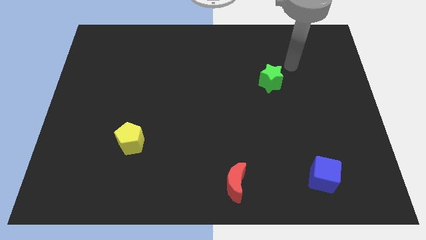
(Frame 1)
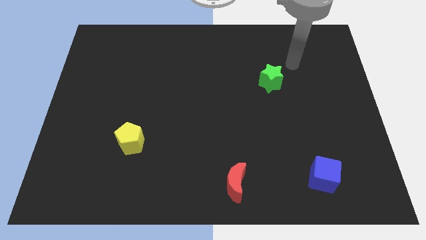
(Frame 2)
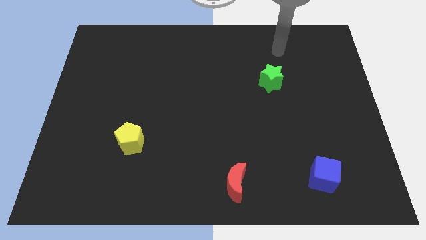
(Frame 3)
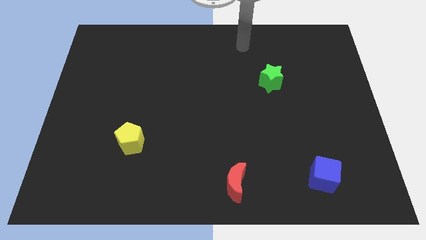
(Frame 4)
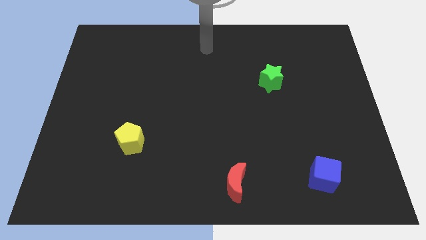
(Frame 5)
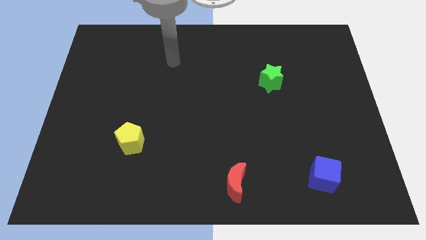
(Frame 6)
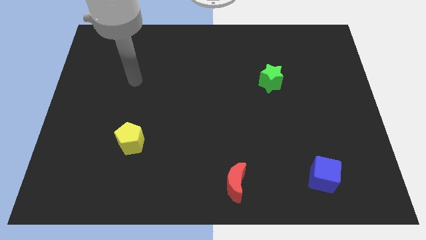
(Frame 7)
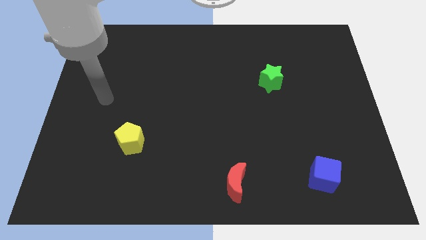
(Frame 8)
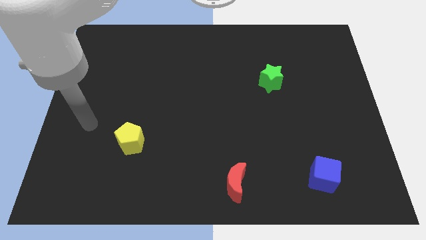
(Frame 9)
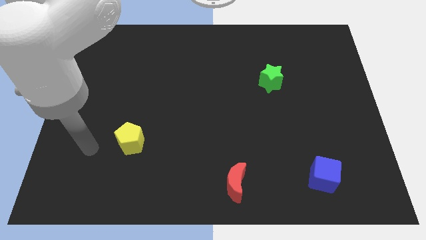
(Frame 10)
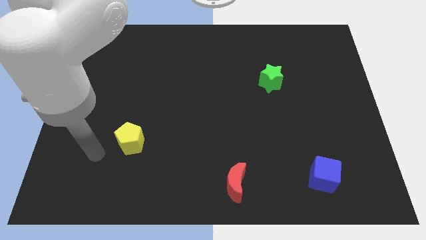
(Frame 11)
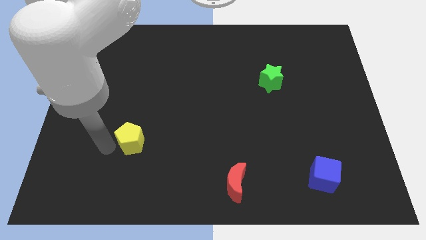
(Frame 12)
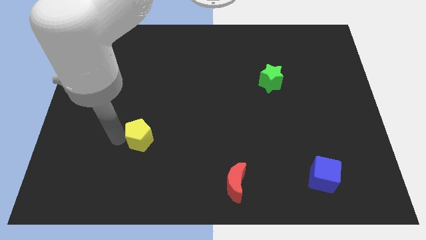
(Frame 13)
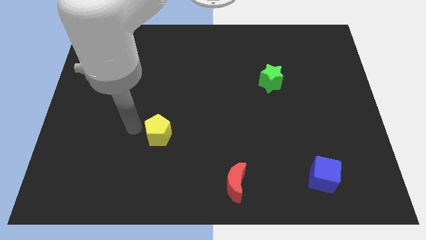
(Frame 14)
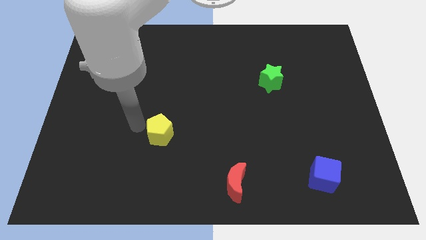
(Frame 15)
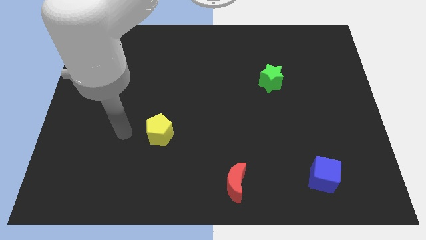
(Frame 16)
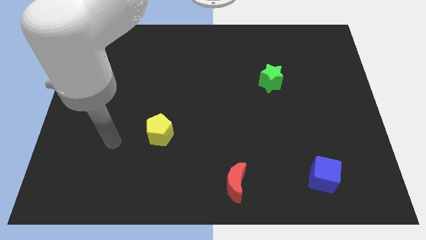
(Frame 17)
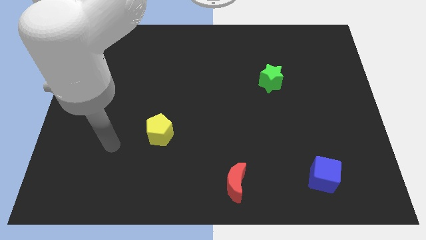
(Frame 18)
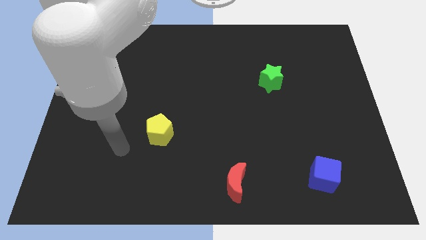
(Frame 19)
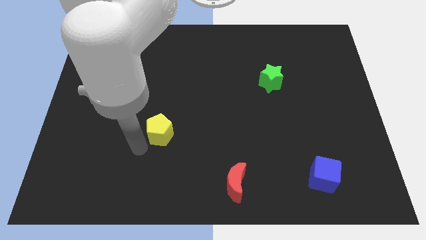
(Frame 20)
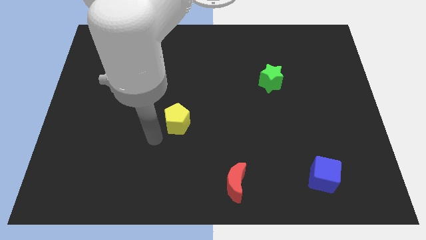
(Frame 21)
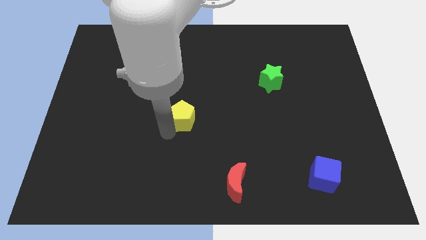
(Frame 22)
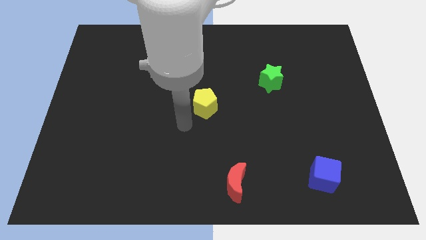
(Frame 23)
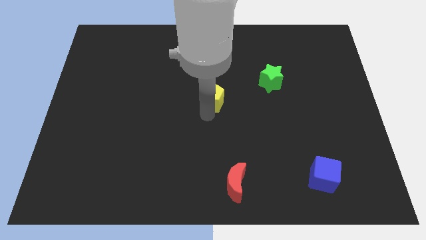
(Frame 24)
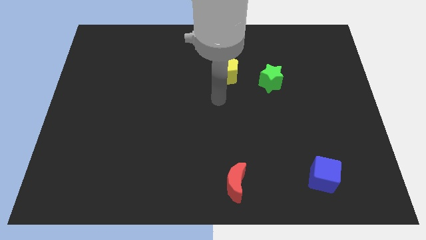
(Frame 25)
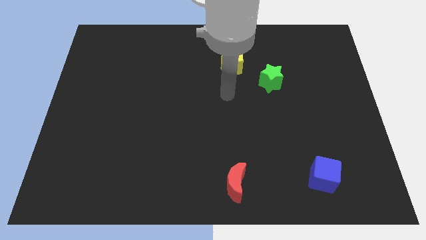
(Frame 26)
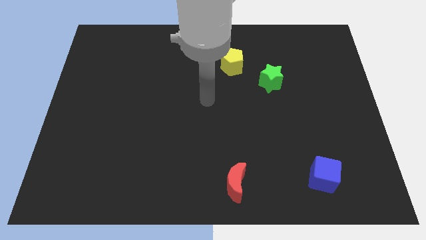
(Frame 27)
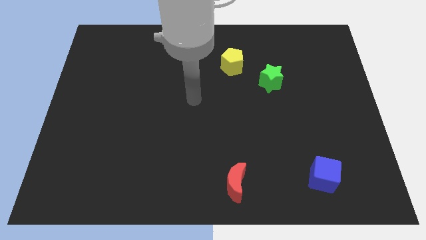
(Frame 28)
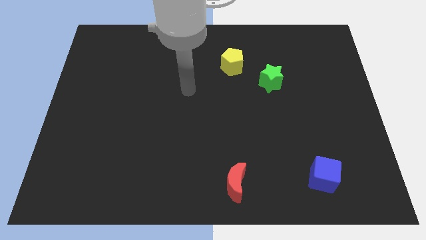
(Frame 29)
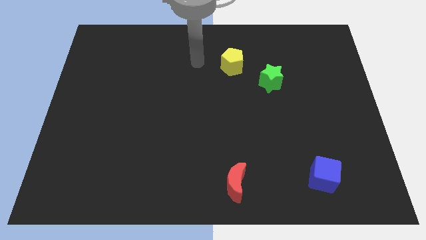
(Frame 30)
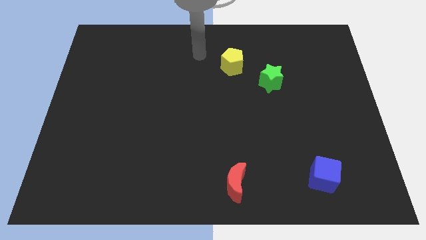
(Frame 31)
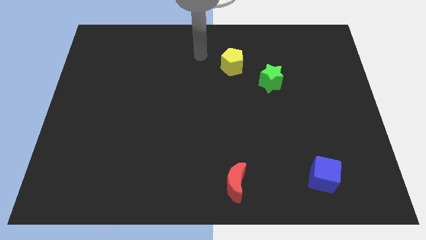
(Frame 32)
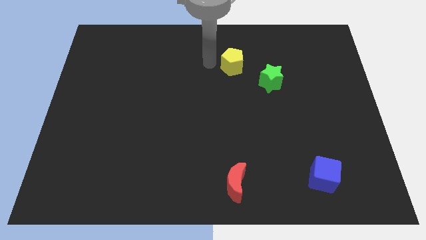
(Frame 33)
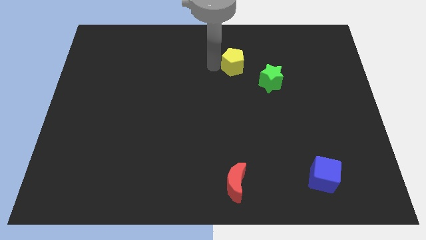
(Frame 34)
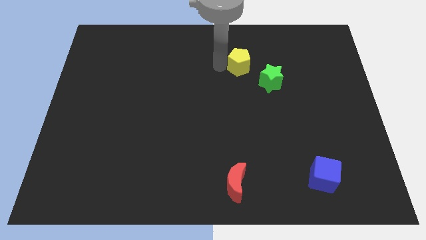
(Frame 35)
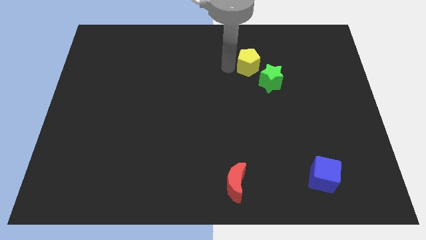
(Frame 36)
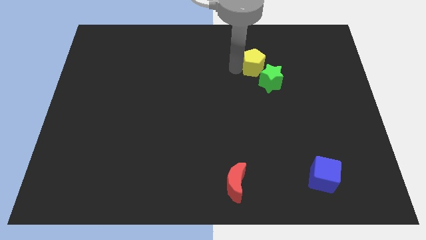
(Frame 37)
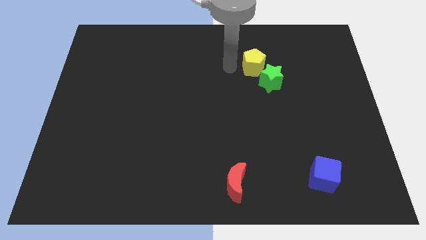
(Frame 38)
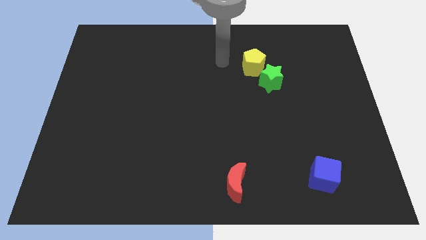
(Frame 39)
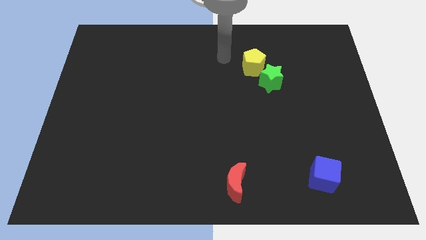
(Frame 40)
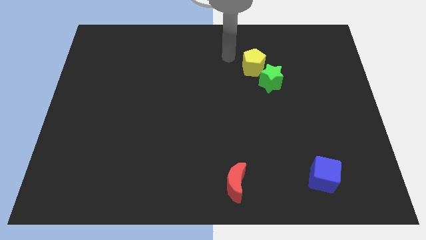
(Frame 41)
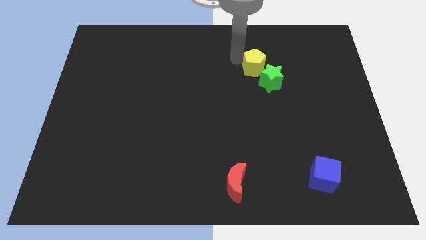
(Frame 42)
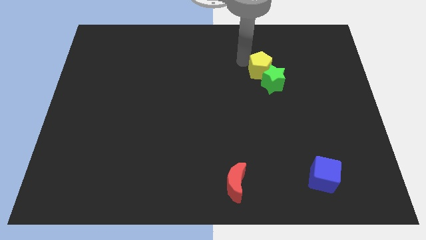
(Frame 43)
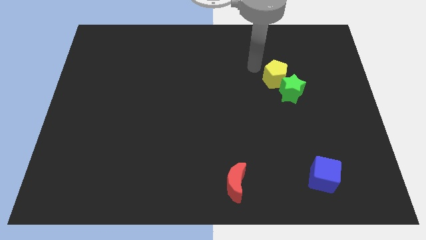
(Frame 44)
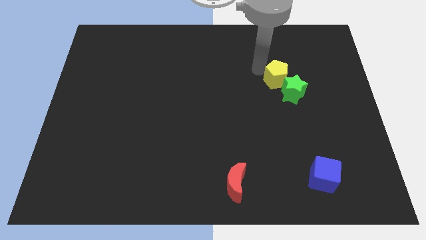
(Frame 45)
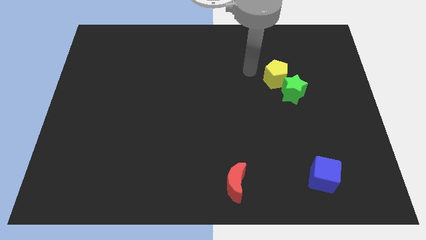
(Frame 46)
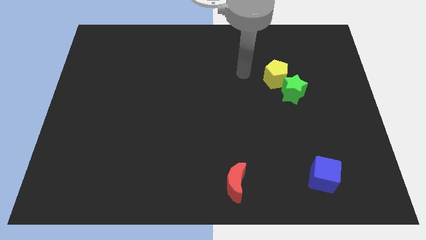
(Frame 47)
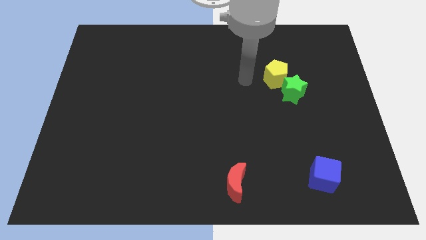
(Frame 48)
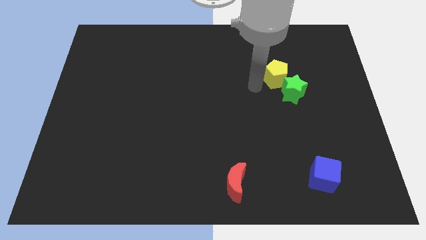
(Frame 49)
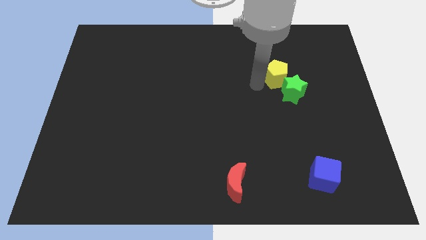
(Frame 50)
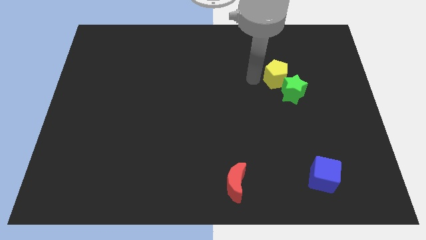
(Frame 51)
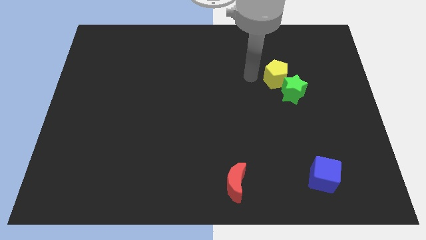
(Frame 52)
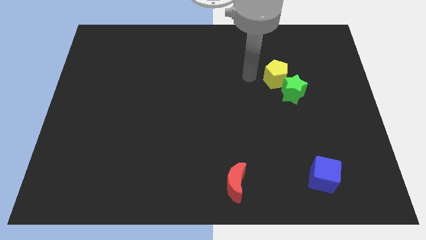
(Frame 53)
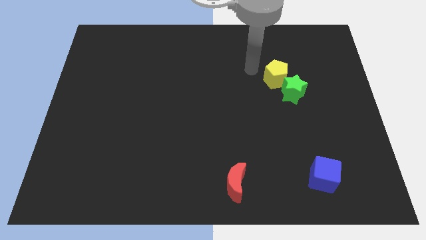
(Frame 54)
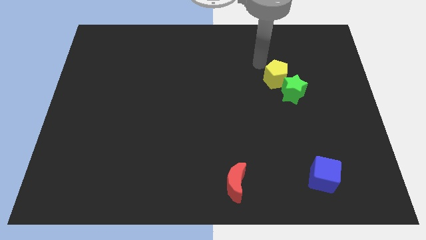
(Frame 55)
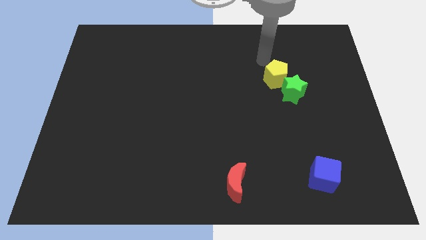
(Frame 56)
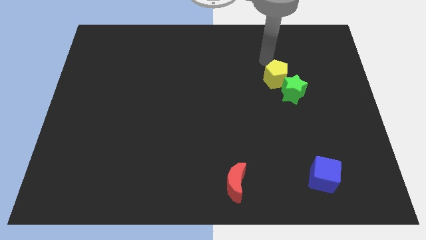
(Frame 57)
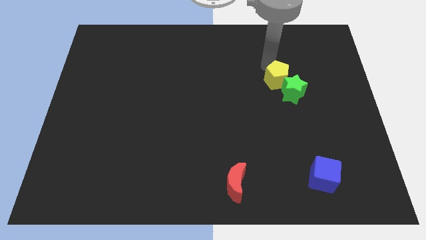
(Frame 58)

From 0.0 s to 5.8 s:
push the pentagon next to the star

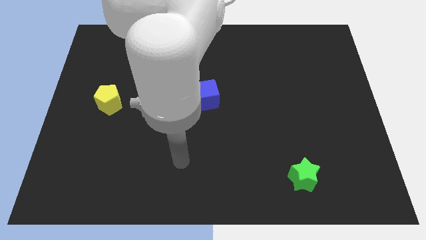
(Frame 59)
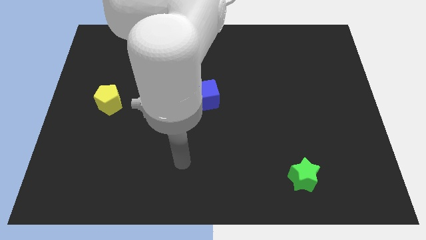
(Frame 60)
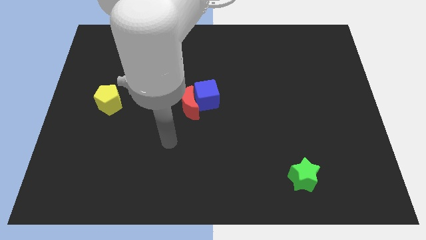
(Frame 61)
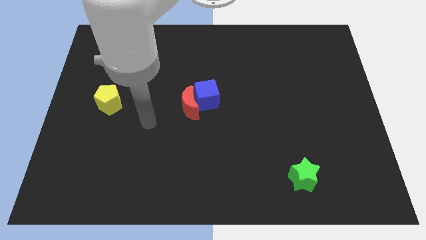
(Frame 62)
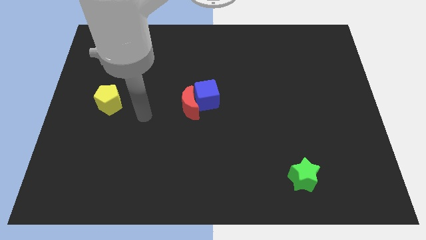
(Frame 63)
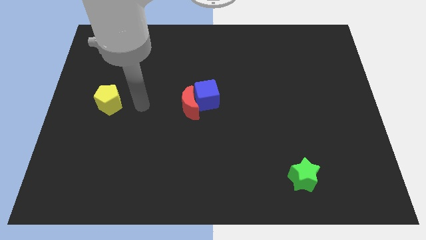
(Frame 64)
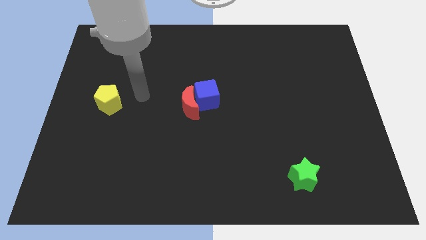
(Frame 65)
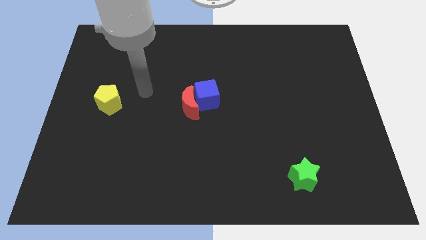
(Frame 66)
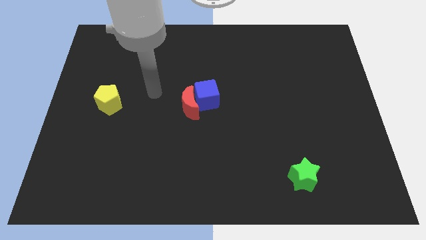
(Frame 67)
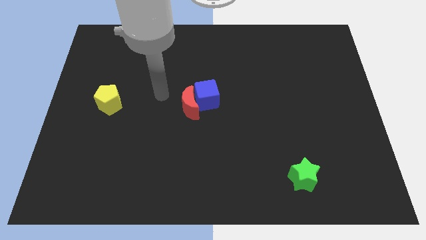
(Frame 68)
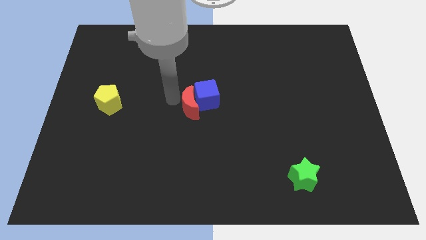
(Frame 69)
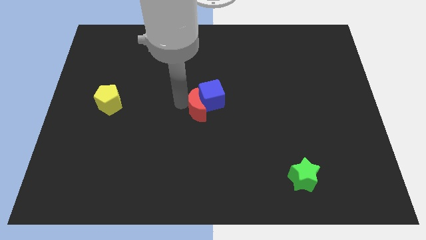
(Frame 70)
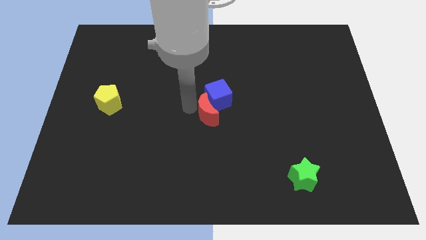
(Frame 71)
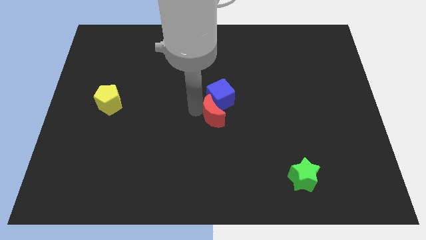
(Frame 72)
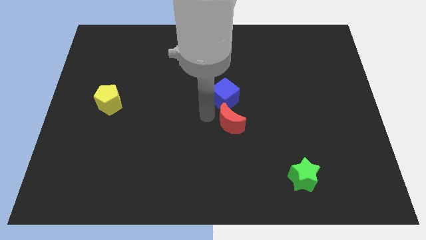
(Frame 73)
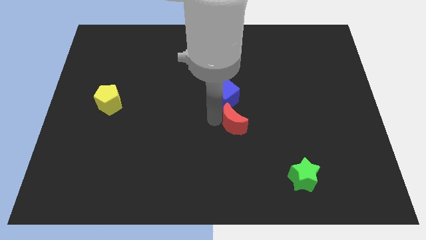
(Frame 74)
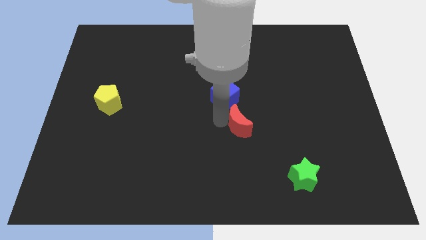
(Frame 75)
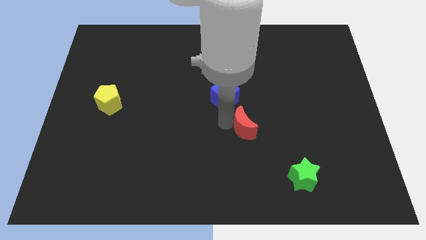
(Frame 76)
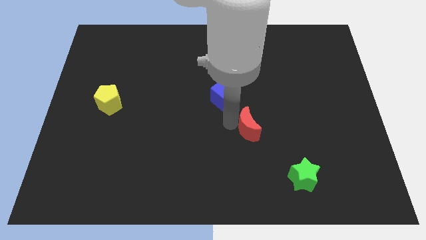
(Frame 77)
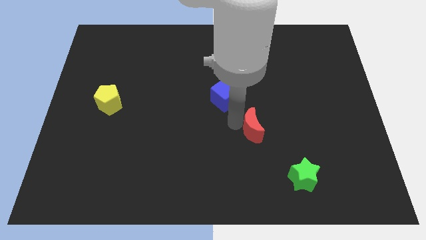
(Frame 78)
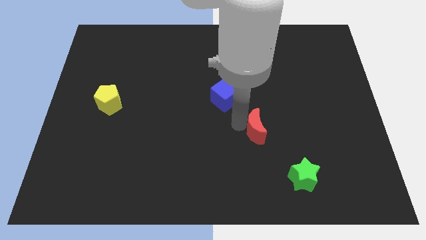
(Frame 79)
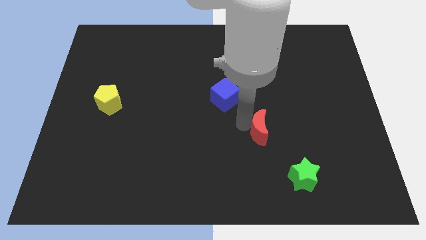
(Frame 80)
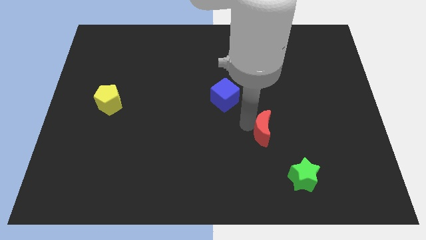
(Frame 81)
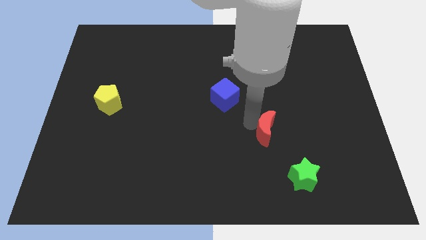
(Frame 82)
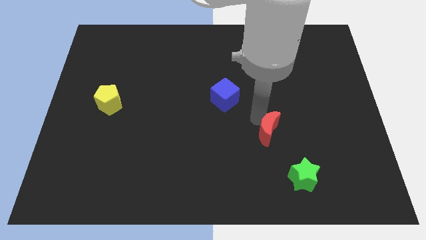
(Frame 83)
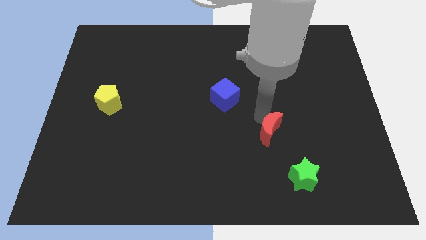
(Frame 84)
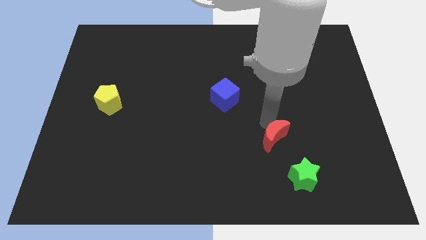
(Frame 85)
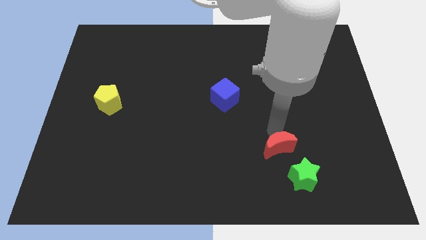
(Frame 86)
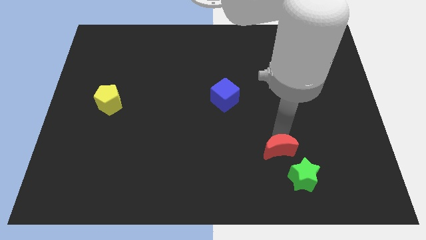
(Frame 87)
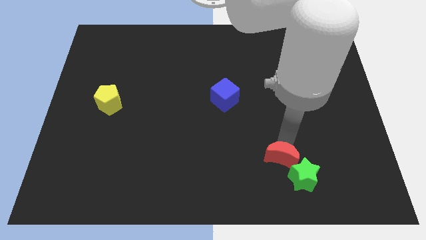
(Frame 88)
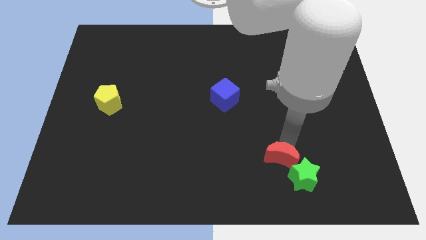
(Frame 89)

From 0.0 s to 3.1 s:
push the moon next to the star

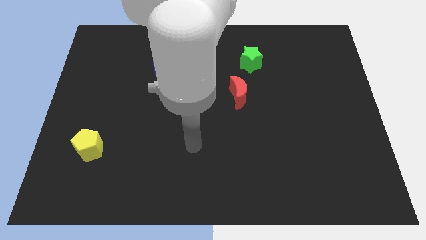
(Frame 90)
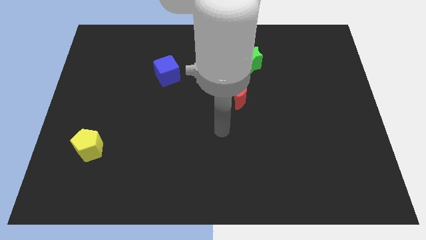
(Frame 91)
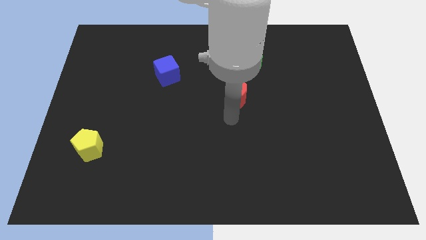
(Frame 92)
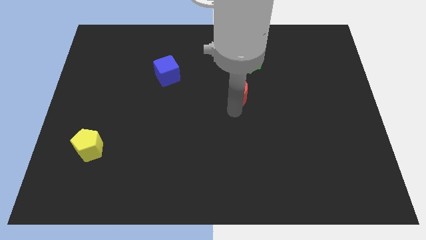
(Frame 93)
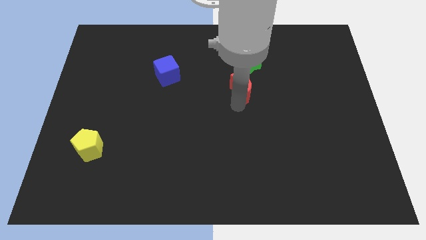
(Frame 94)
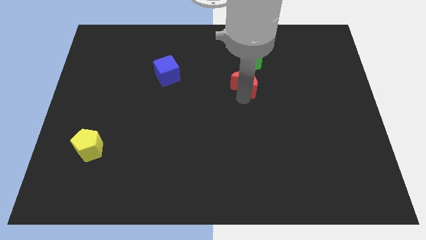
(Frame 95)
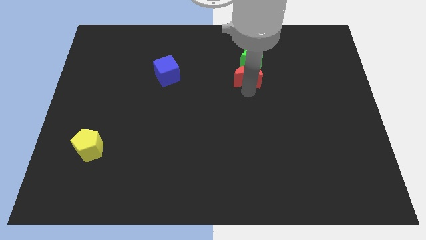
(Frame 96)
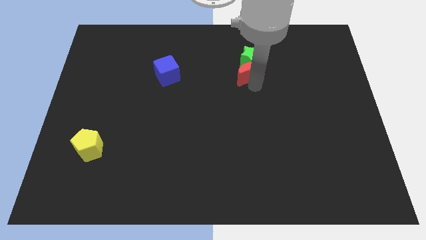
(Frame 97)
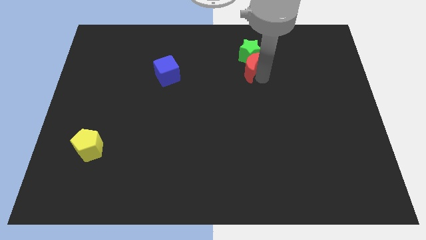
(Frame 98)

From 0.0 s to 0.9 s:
slide the red moon to the green block
